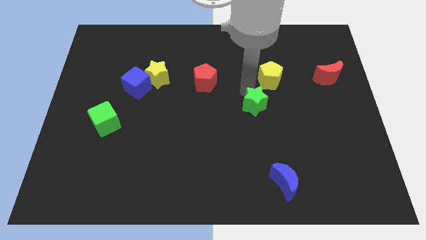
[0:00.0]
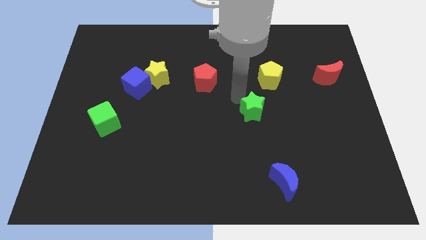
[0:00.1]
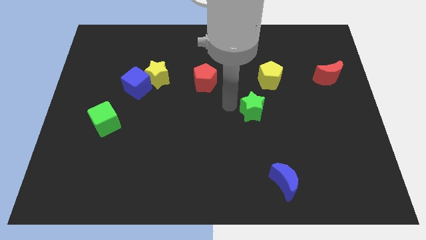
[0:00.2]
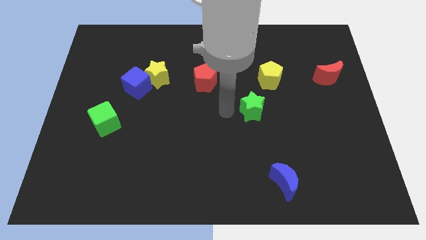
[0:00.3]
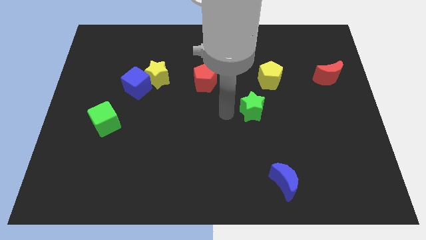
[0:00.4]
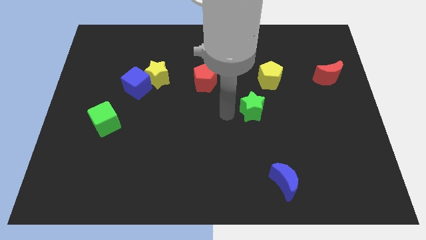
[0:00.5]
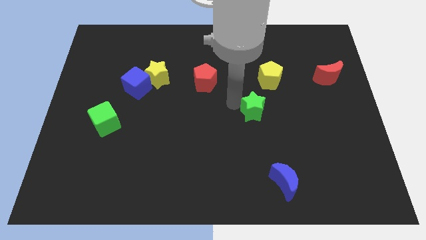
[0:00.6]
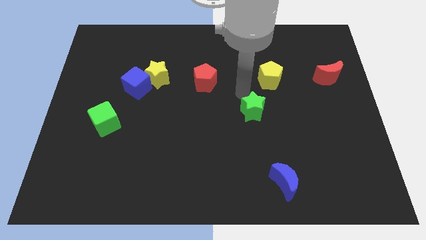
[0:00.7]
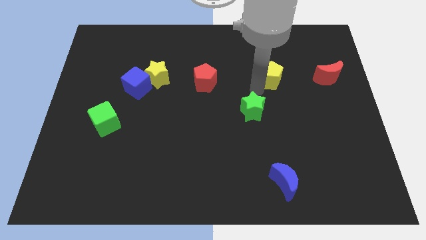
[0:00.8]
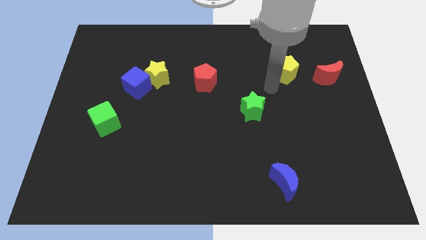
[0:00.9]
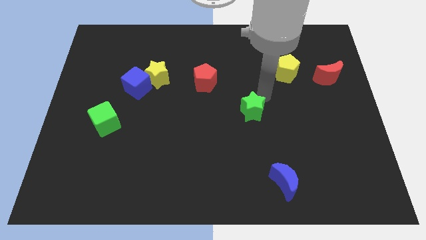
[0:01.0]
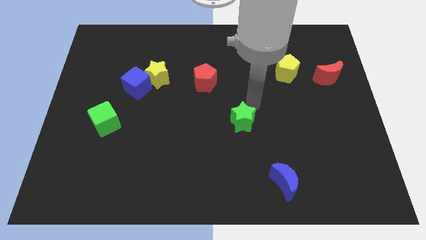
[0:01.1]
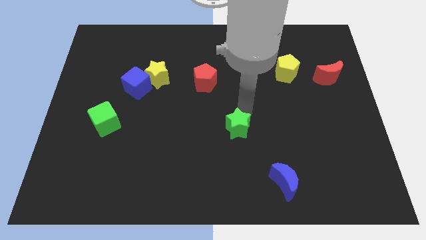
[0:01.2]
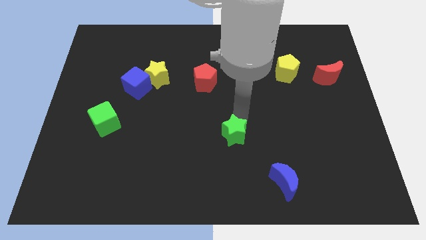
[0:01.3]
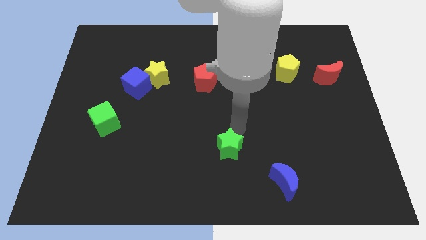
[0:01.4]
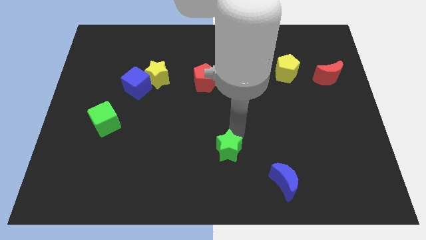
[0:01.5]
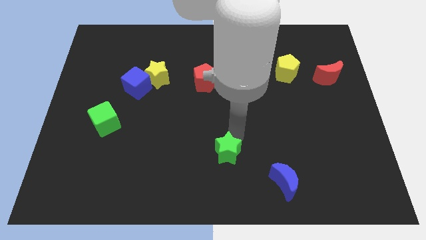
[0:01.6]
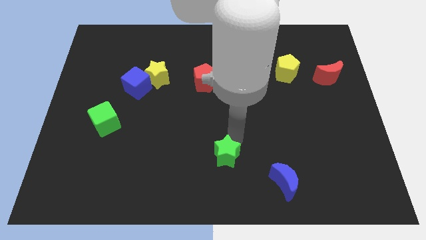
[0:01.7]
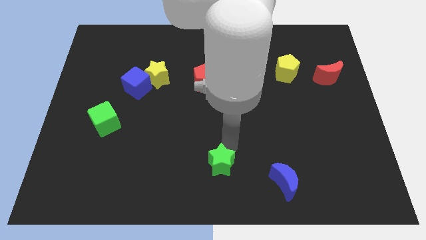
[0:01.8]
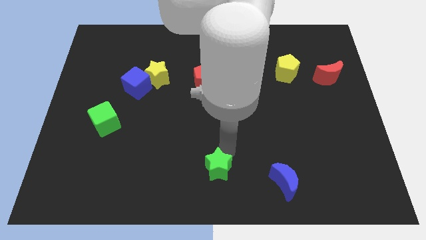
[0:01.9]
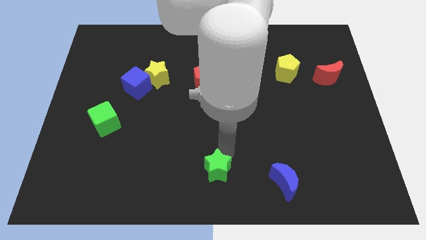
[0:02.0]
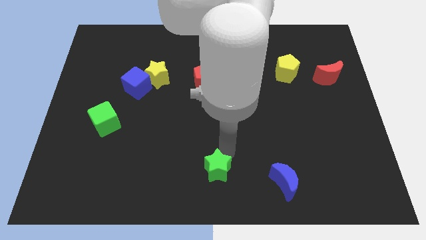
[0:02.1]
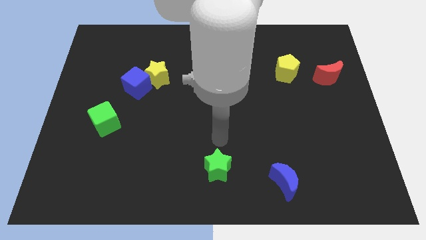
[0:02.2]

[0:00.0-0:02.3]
slightly push the green star downwards

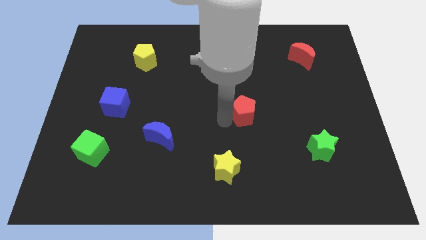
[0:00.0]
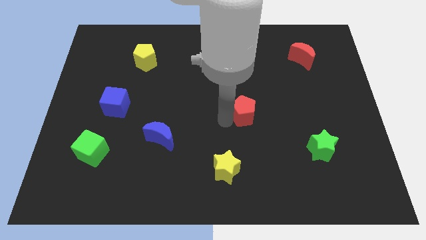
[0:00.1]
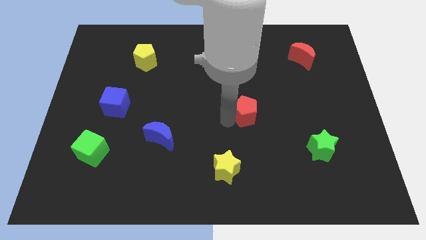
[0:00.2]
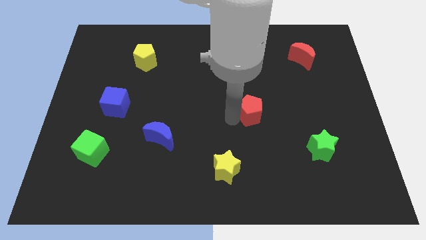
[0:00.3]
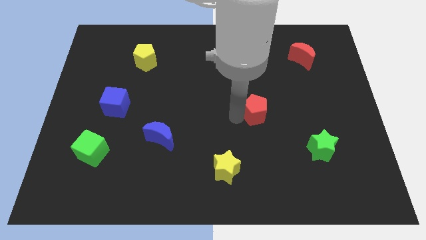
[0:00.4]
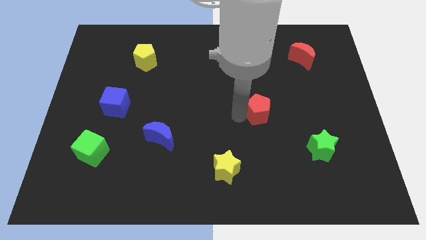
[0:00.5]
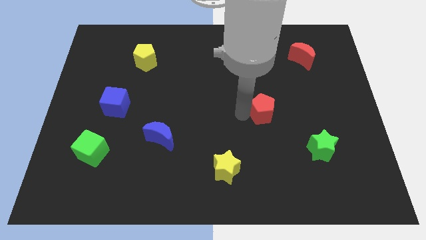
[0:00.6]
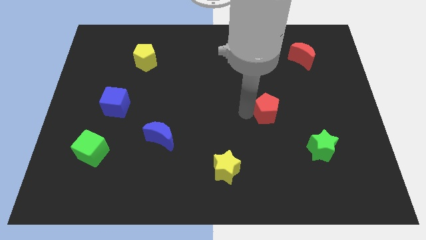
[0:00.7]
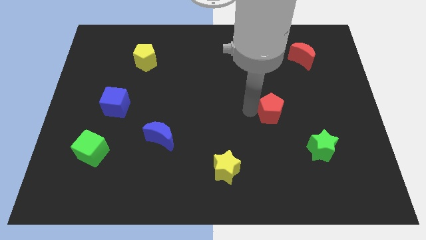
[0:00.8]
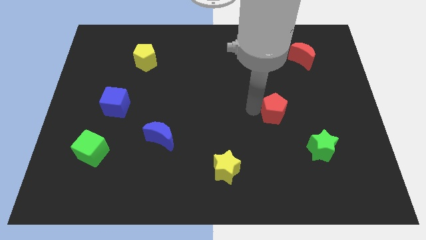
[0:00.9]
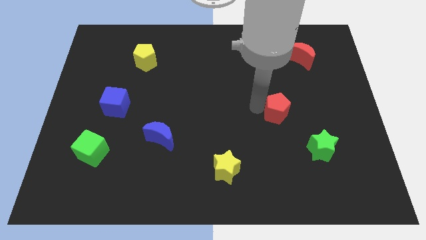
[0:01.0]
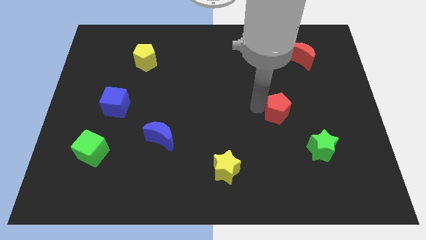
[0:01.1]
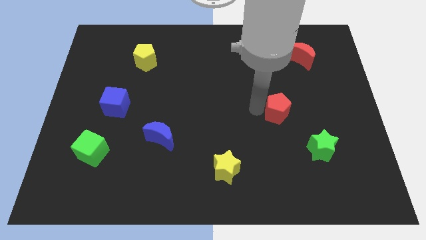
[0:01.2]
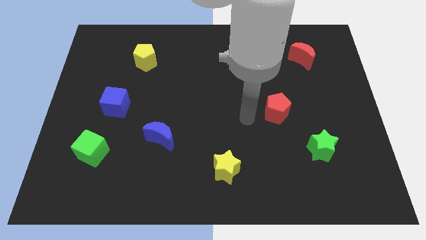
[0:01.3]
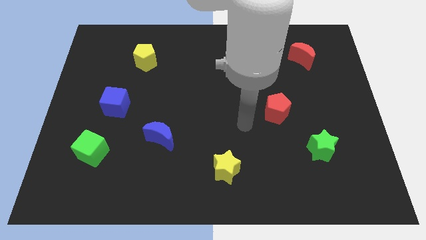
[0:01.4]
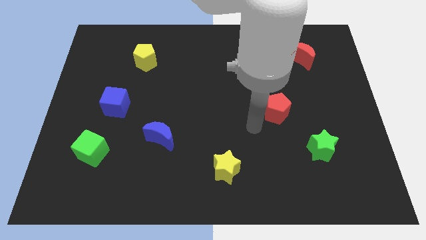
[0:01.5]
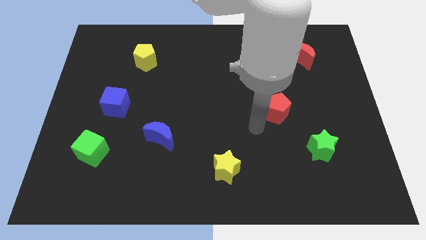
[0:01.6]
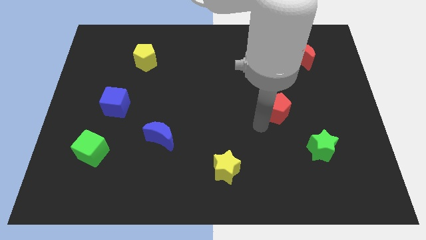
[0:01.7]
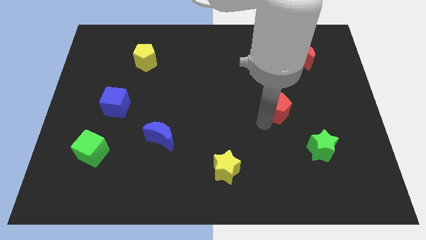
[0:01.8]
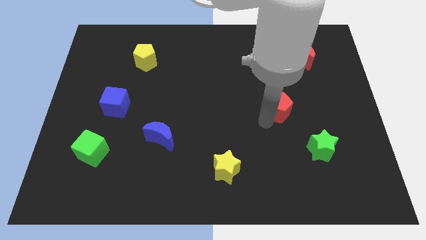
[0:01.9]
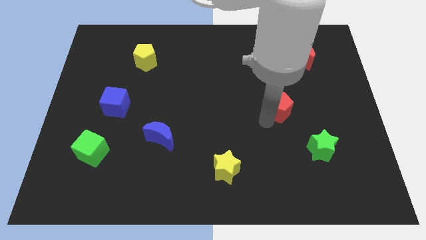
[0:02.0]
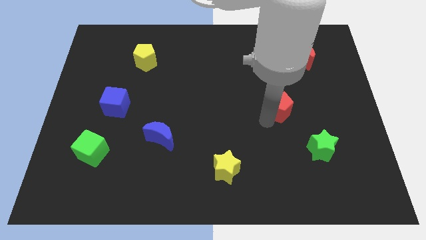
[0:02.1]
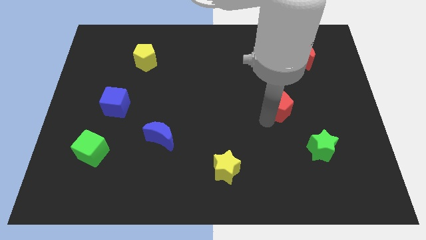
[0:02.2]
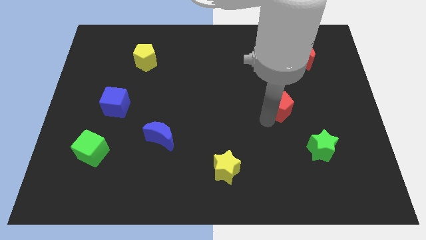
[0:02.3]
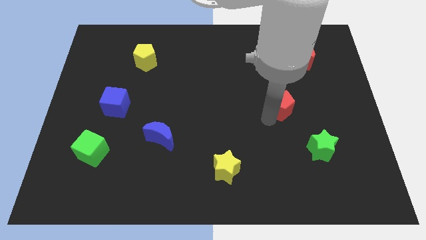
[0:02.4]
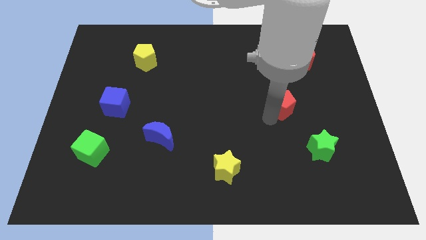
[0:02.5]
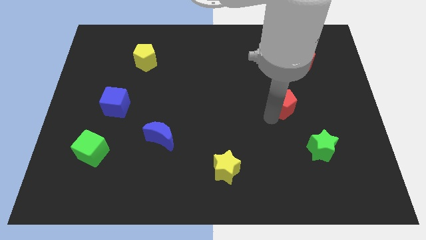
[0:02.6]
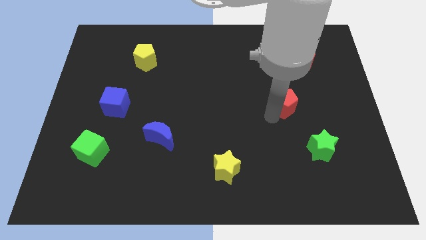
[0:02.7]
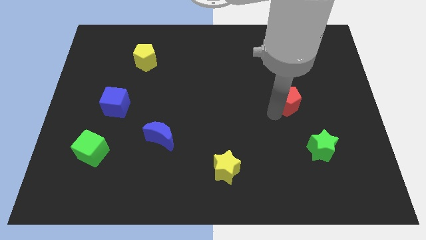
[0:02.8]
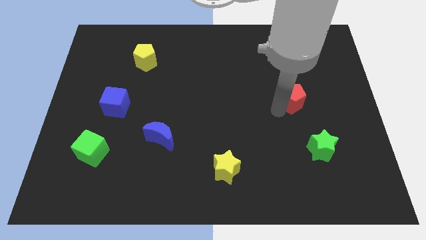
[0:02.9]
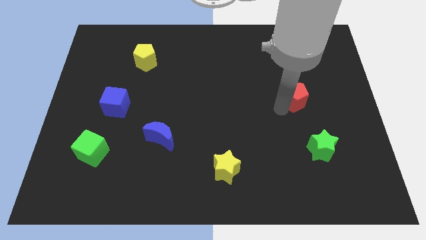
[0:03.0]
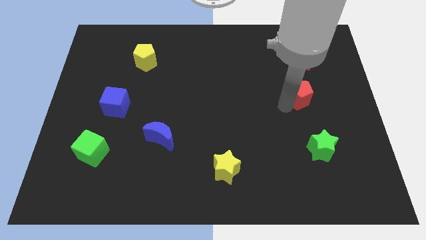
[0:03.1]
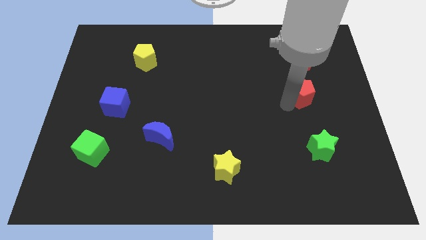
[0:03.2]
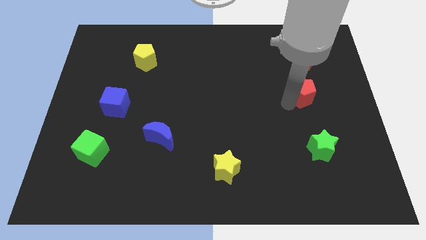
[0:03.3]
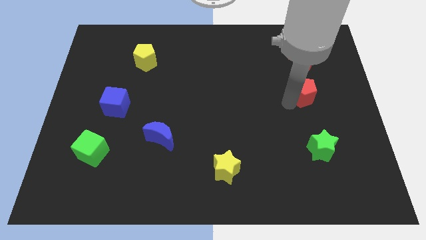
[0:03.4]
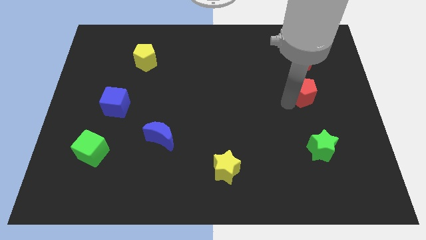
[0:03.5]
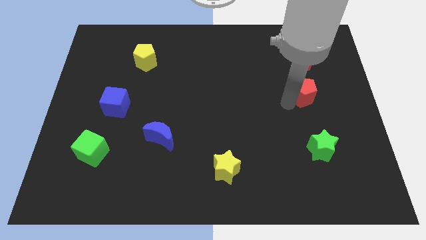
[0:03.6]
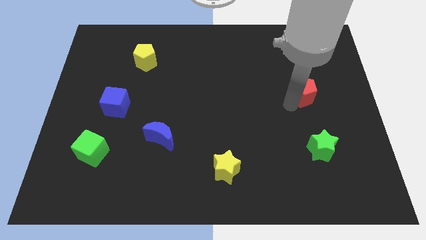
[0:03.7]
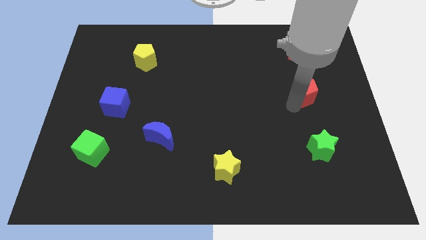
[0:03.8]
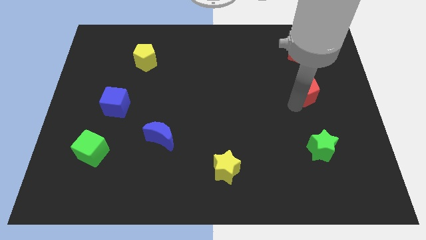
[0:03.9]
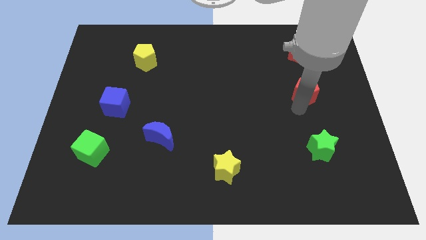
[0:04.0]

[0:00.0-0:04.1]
place red pentagon in between red moon and green star

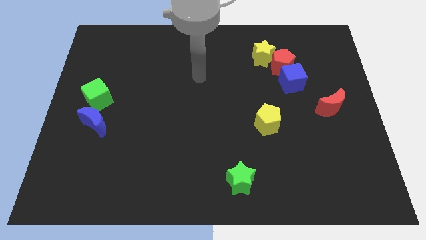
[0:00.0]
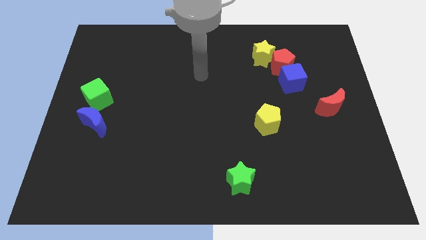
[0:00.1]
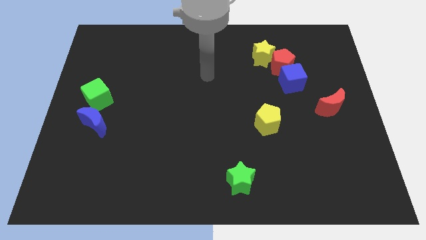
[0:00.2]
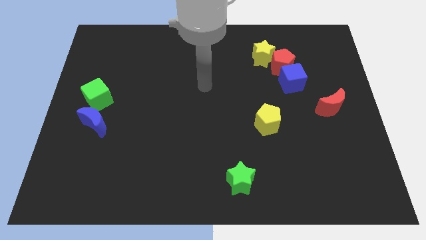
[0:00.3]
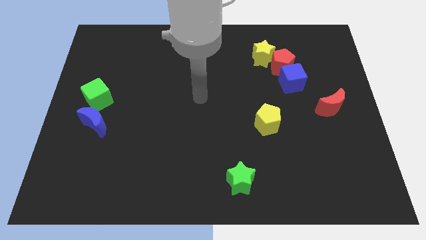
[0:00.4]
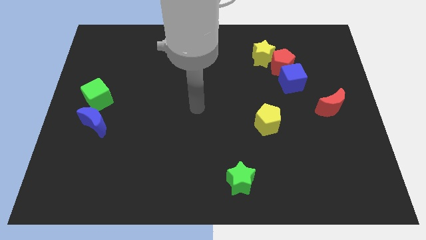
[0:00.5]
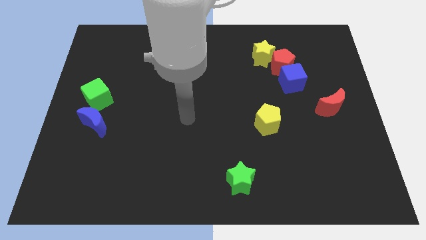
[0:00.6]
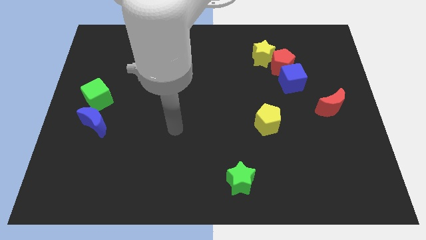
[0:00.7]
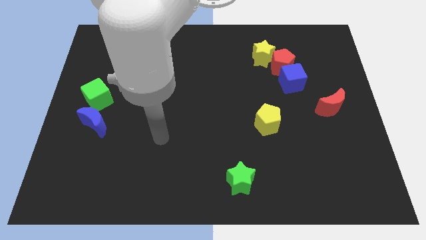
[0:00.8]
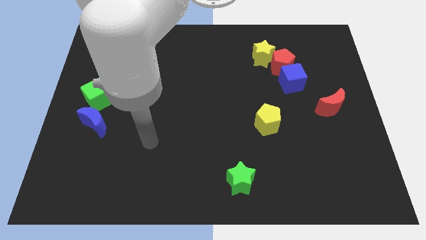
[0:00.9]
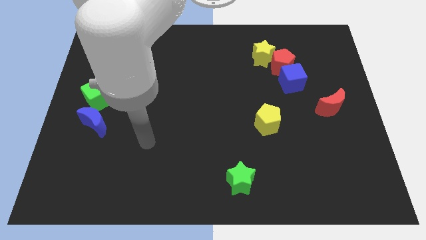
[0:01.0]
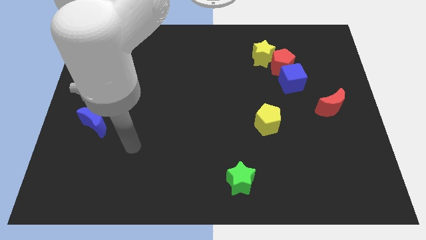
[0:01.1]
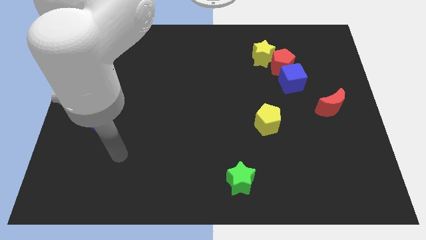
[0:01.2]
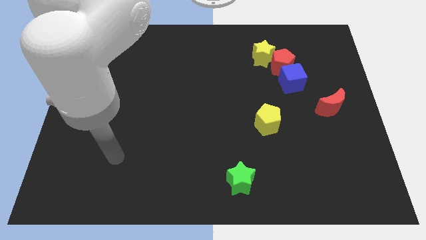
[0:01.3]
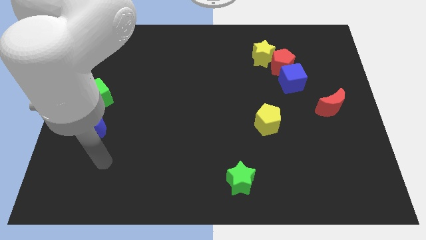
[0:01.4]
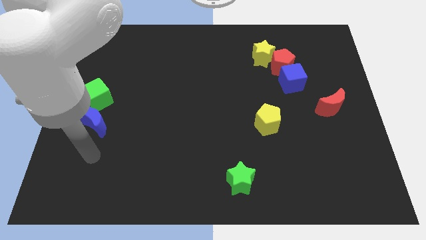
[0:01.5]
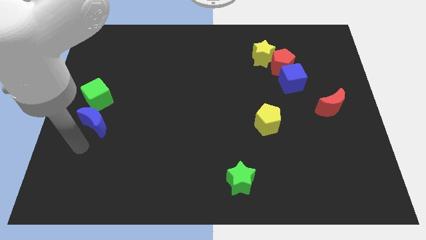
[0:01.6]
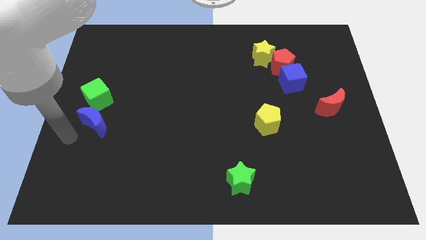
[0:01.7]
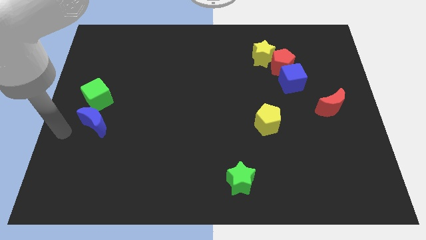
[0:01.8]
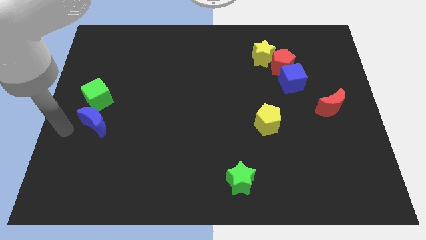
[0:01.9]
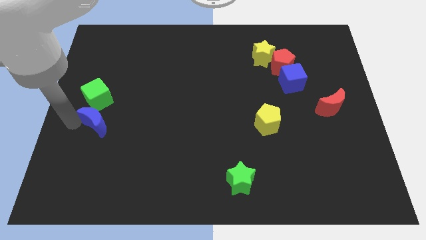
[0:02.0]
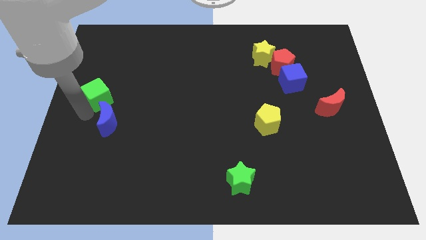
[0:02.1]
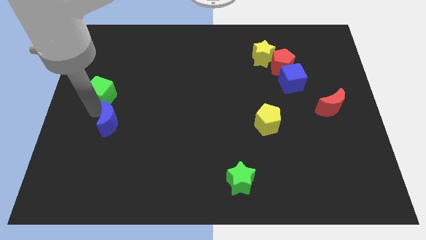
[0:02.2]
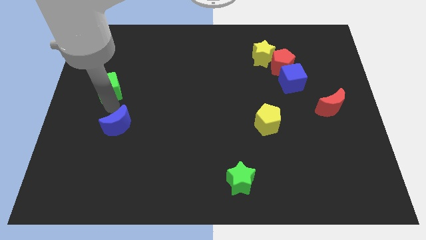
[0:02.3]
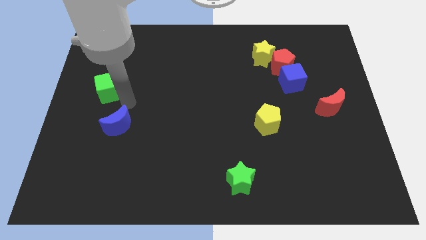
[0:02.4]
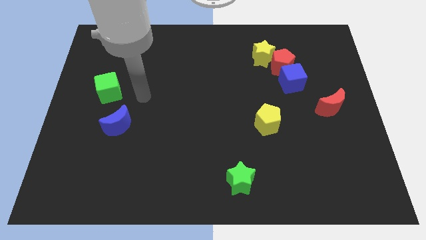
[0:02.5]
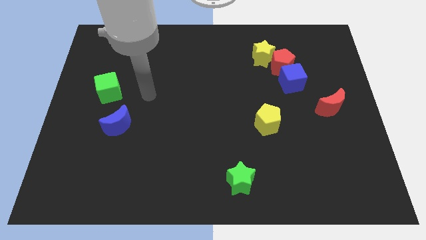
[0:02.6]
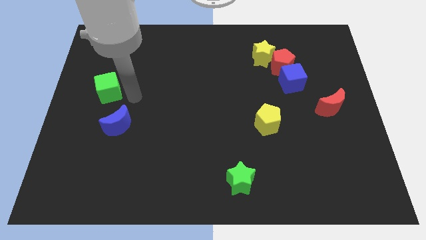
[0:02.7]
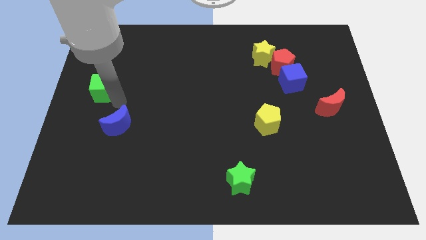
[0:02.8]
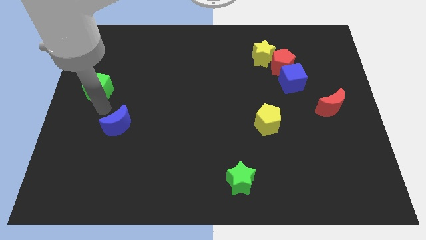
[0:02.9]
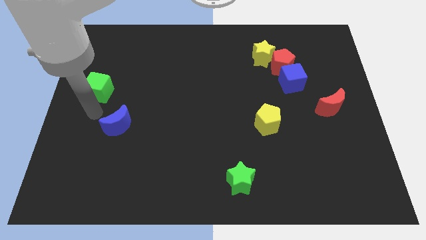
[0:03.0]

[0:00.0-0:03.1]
separate green cube and blue moon
